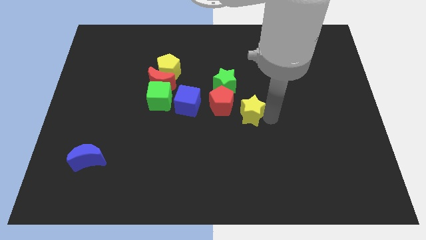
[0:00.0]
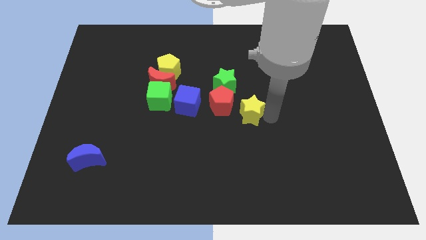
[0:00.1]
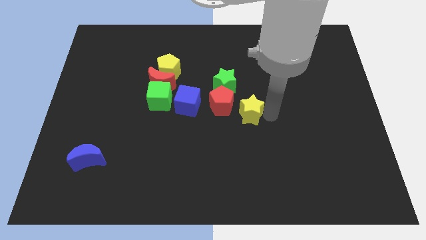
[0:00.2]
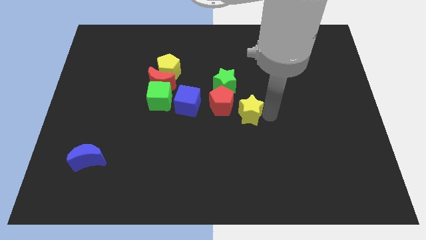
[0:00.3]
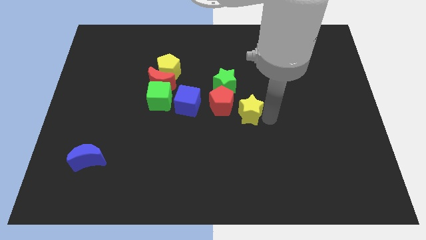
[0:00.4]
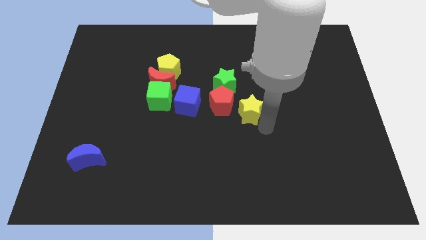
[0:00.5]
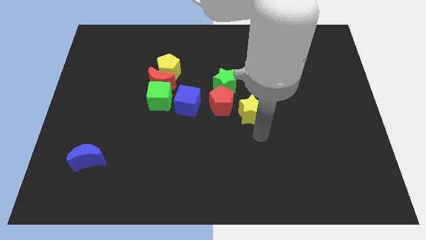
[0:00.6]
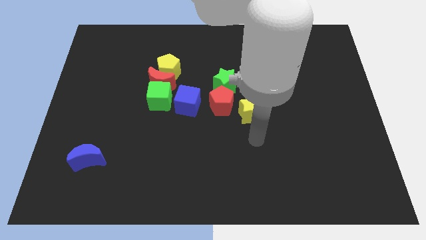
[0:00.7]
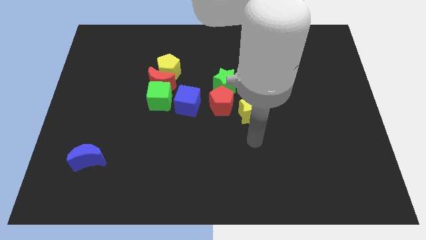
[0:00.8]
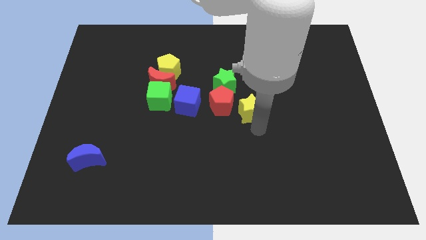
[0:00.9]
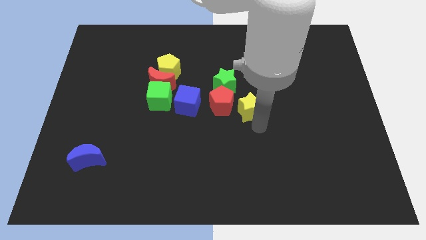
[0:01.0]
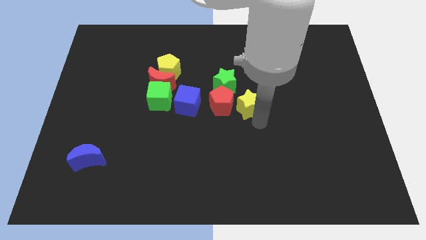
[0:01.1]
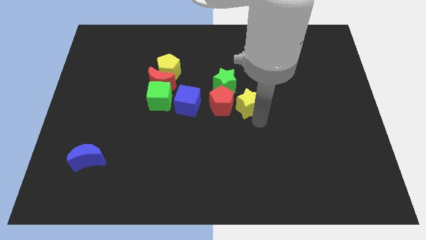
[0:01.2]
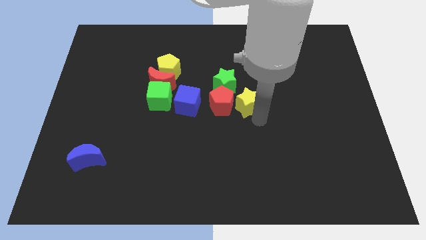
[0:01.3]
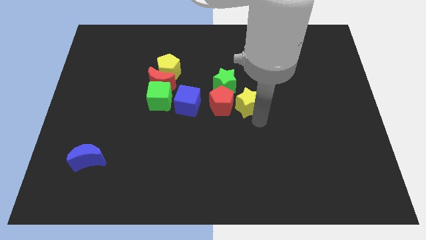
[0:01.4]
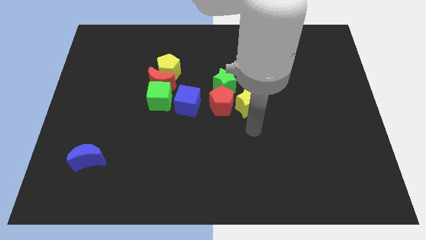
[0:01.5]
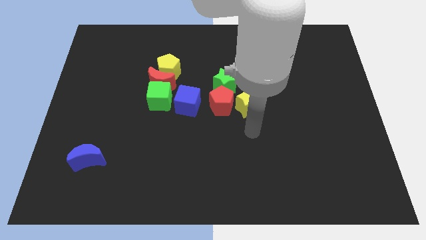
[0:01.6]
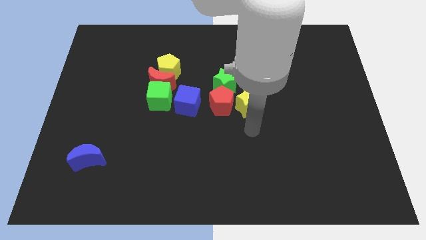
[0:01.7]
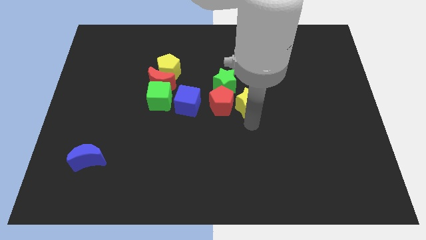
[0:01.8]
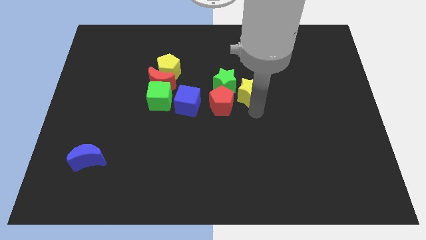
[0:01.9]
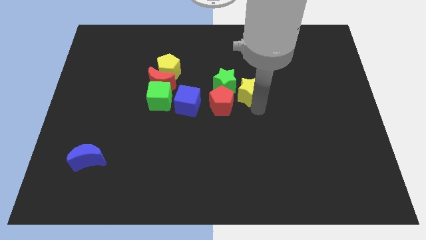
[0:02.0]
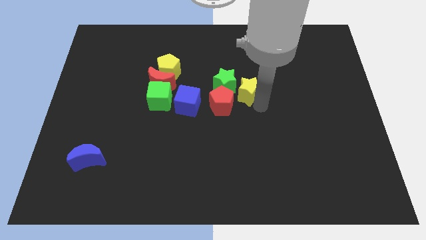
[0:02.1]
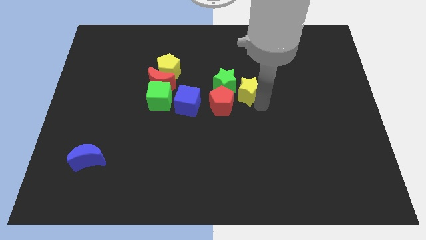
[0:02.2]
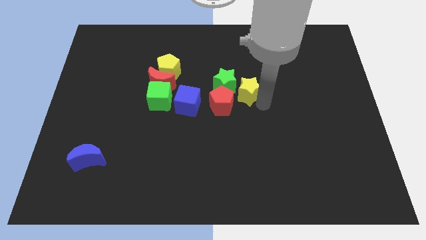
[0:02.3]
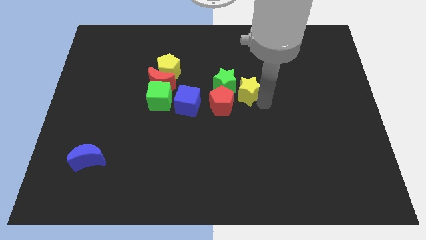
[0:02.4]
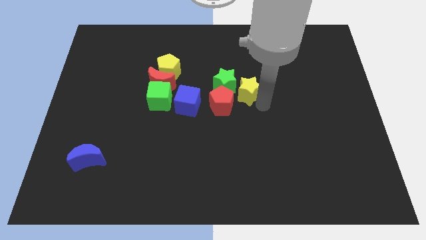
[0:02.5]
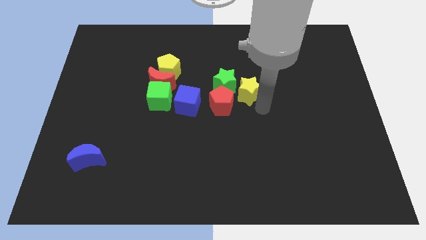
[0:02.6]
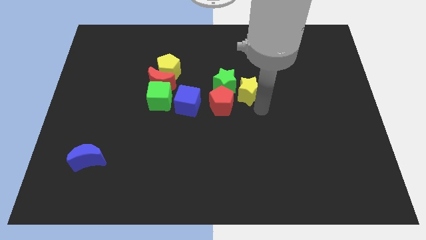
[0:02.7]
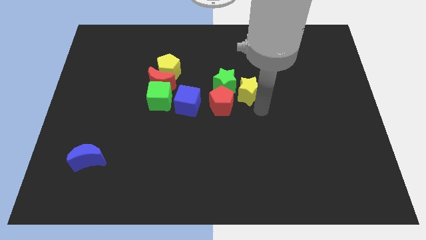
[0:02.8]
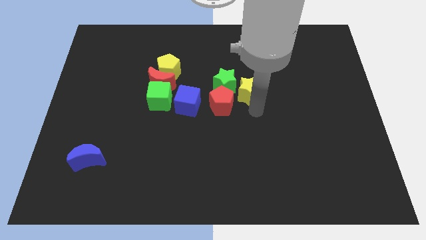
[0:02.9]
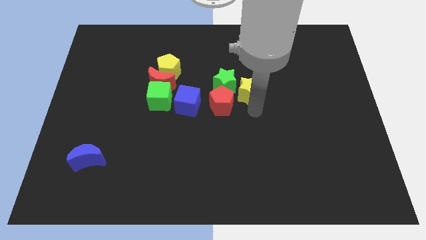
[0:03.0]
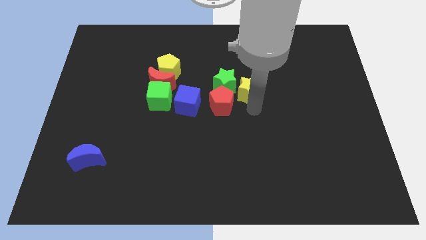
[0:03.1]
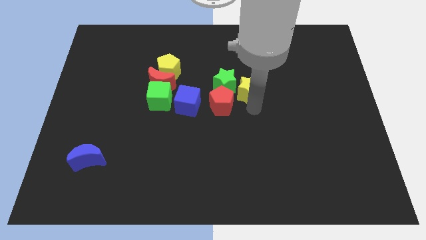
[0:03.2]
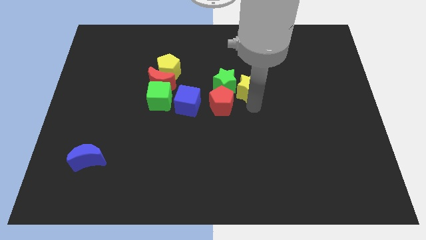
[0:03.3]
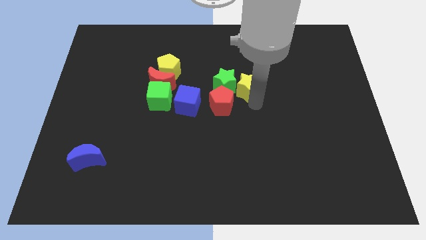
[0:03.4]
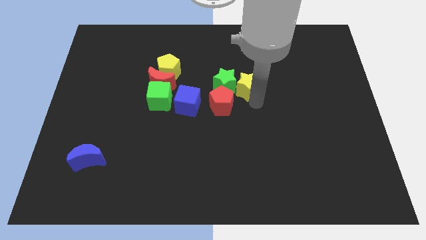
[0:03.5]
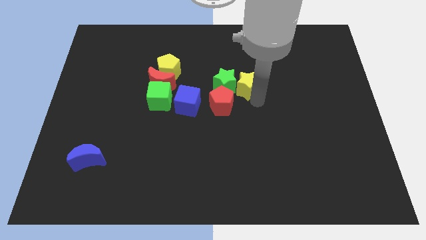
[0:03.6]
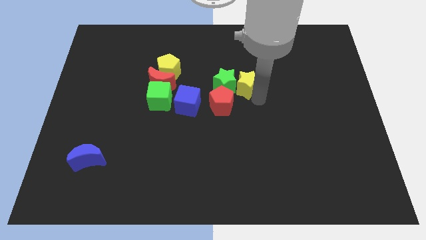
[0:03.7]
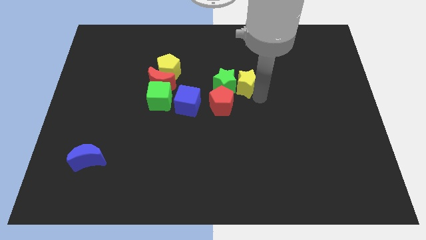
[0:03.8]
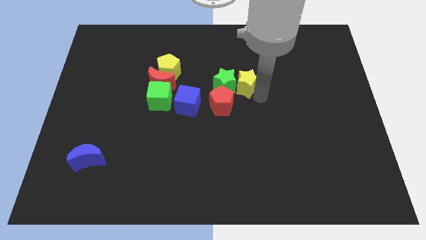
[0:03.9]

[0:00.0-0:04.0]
put the yellow star right to the green star

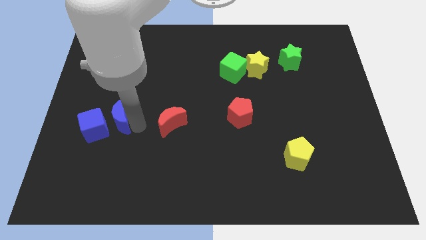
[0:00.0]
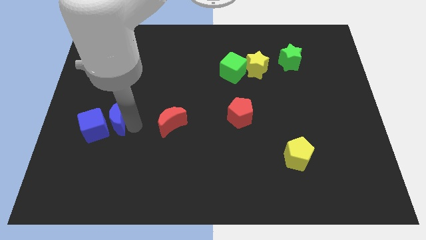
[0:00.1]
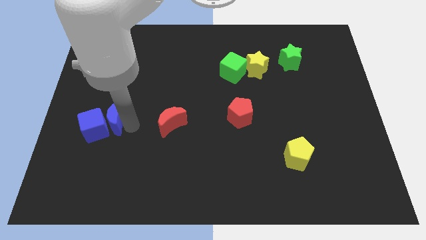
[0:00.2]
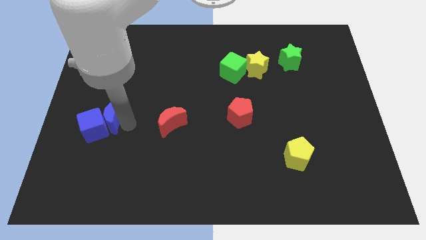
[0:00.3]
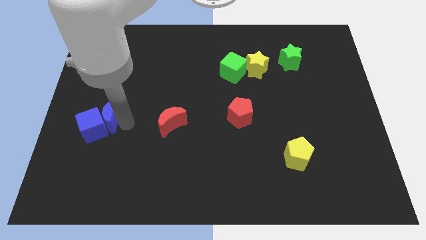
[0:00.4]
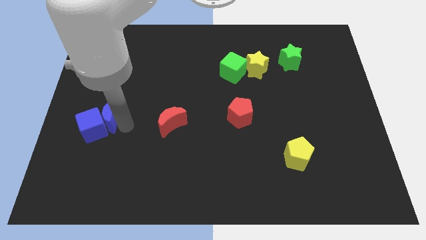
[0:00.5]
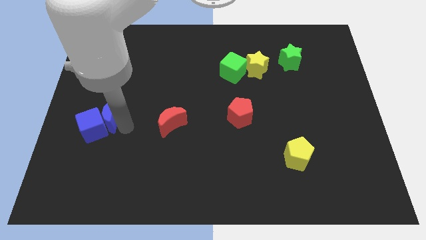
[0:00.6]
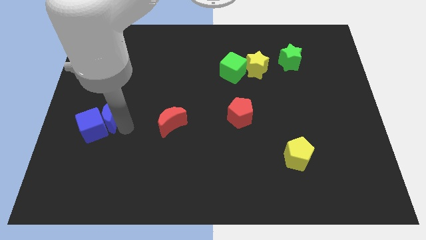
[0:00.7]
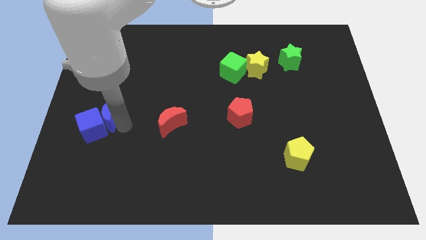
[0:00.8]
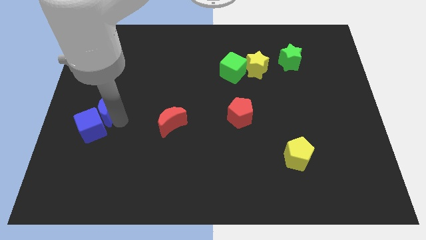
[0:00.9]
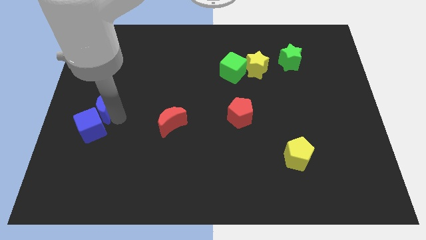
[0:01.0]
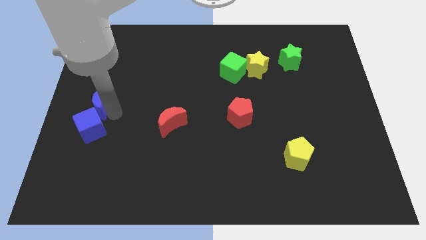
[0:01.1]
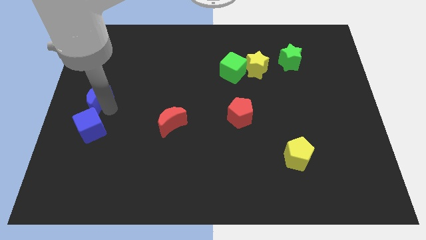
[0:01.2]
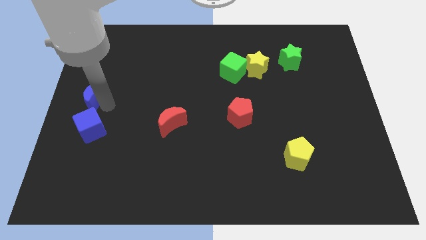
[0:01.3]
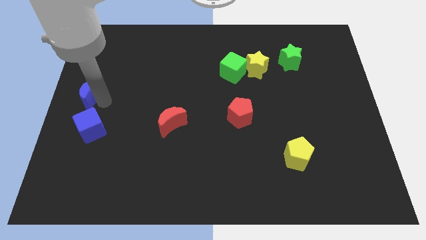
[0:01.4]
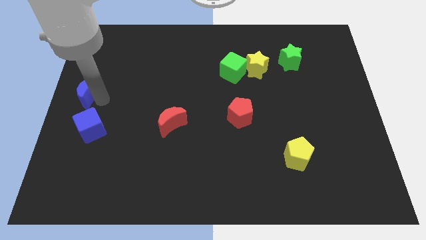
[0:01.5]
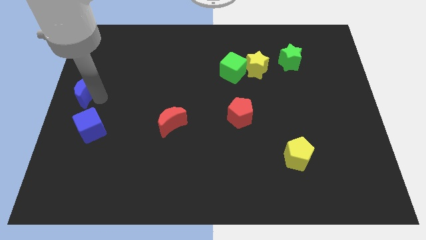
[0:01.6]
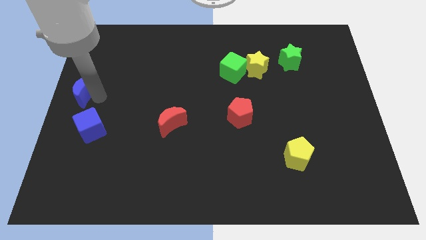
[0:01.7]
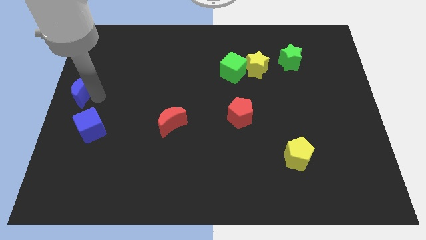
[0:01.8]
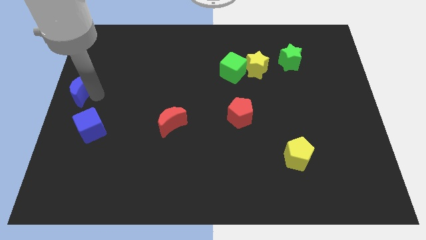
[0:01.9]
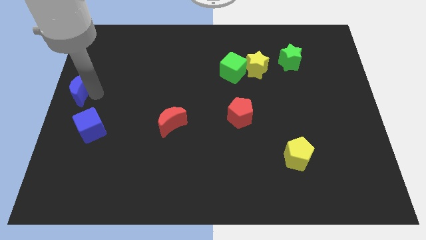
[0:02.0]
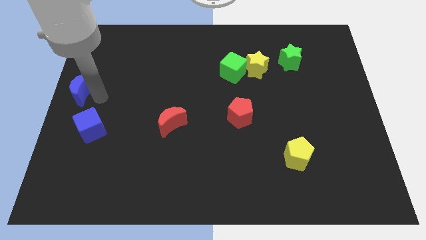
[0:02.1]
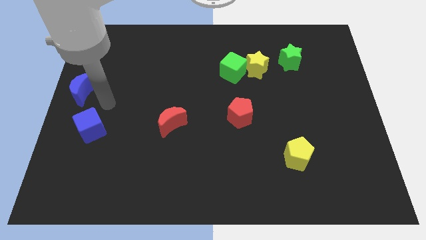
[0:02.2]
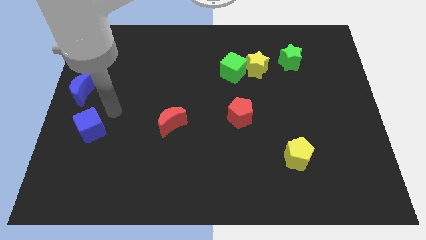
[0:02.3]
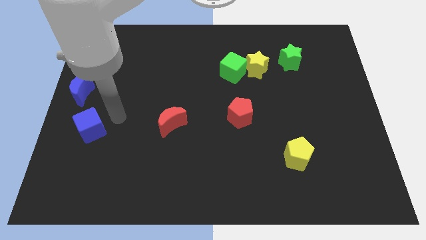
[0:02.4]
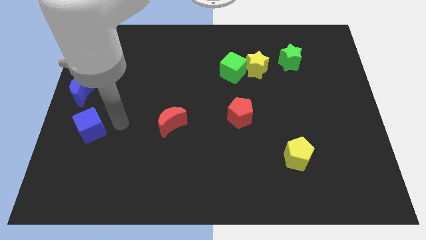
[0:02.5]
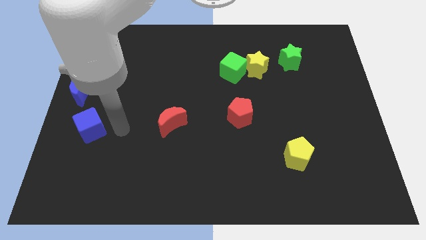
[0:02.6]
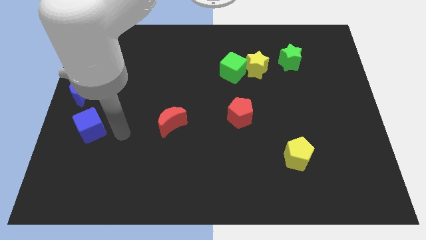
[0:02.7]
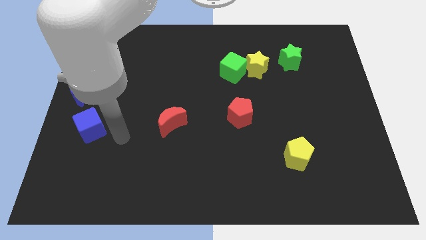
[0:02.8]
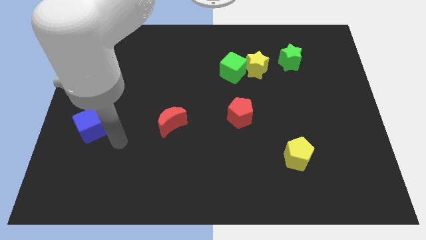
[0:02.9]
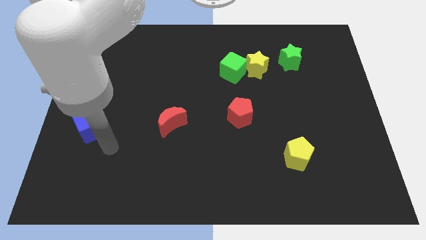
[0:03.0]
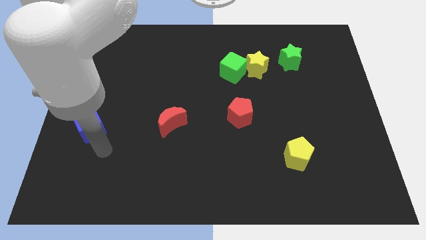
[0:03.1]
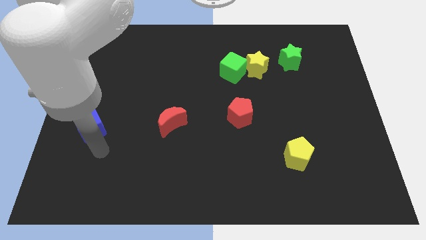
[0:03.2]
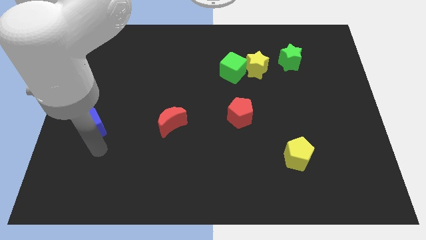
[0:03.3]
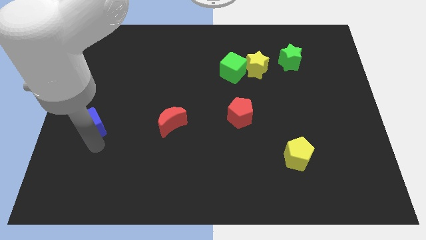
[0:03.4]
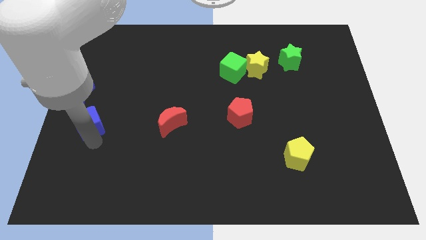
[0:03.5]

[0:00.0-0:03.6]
push the blue crescent to the top of the blue cube

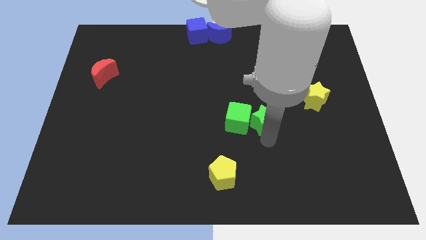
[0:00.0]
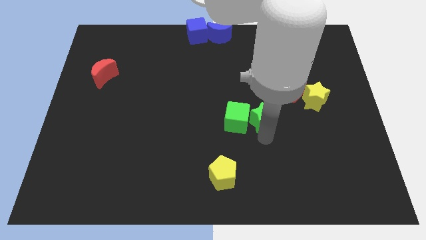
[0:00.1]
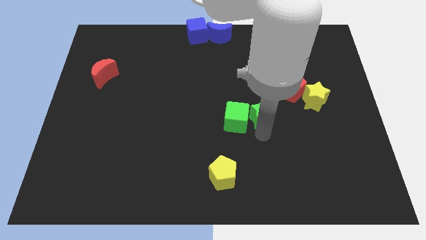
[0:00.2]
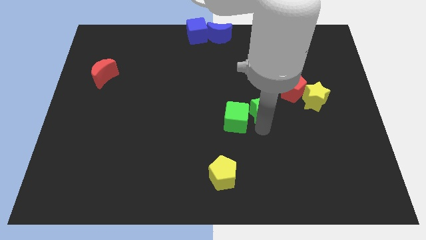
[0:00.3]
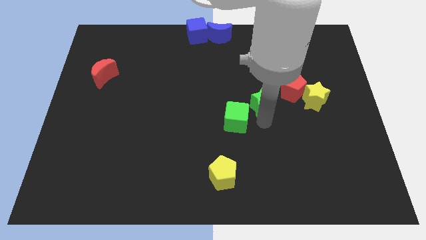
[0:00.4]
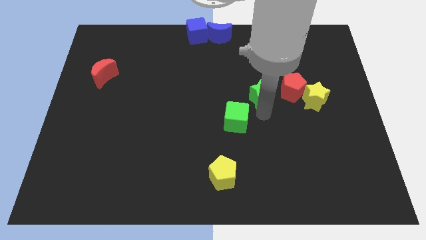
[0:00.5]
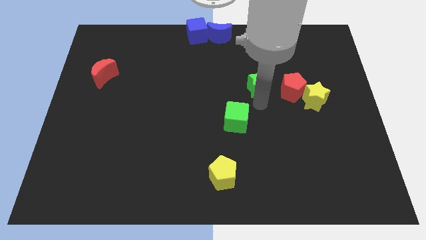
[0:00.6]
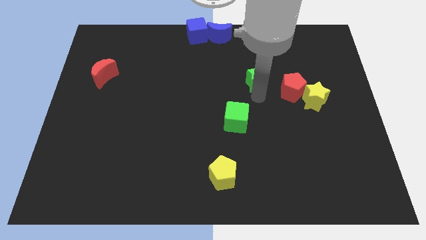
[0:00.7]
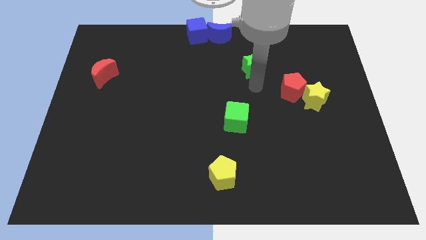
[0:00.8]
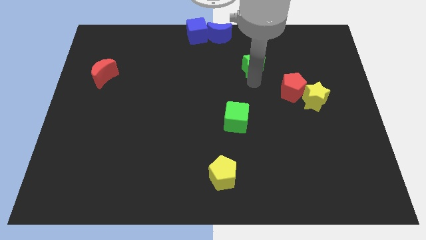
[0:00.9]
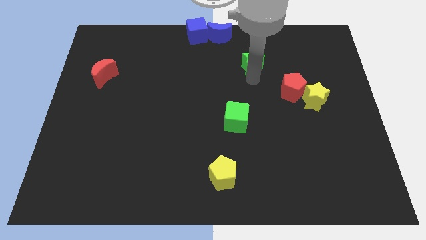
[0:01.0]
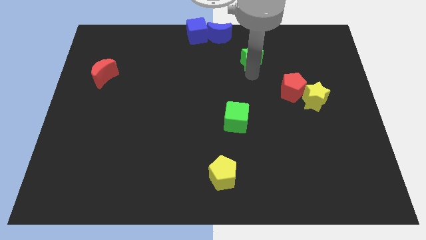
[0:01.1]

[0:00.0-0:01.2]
separate the green star from the green cube

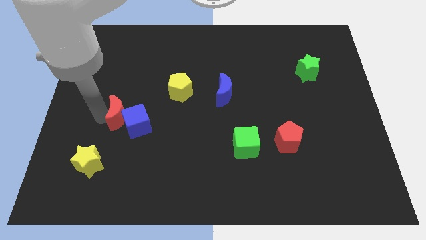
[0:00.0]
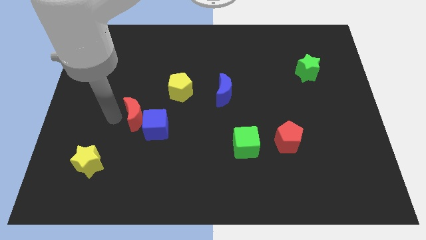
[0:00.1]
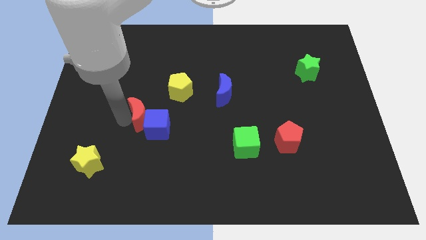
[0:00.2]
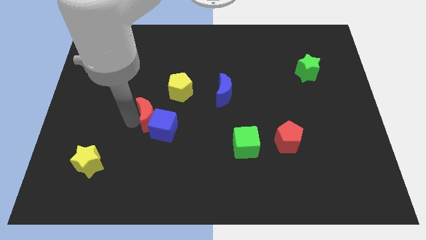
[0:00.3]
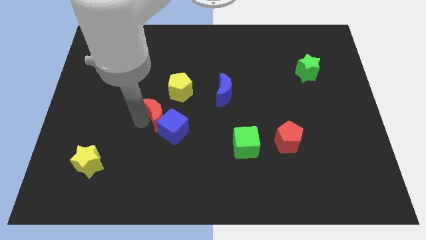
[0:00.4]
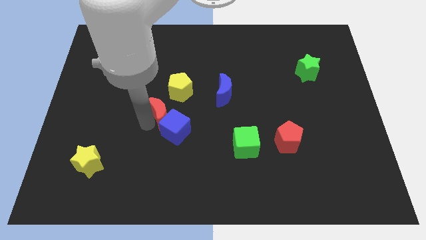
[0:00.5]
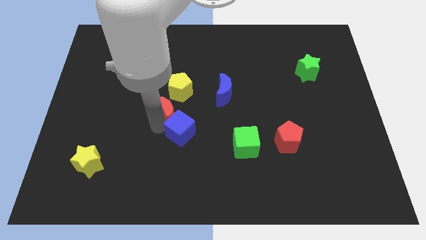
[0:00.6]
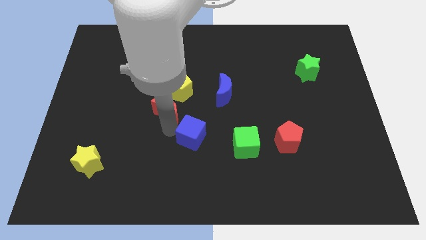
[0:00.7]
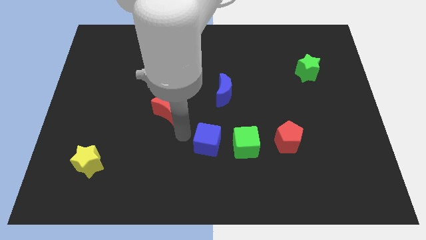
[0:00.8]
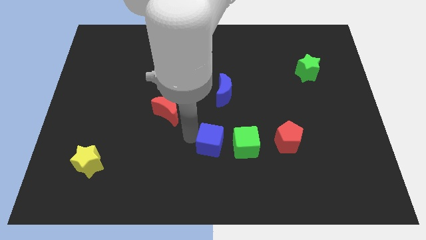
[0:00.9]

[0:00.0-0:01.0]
separate blue cube from red moon
